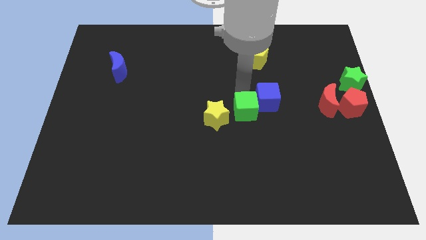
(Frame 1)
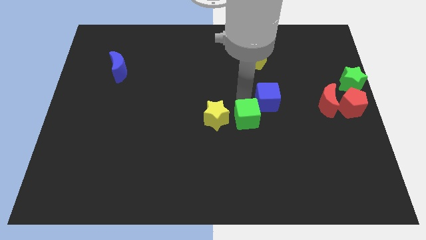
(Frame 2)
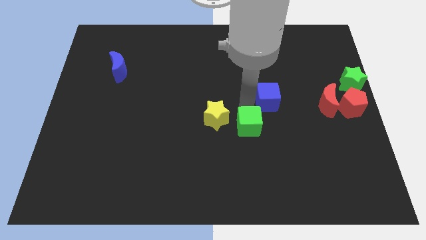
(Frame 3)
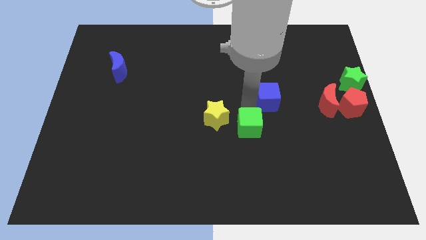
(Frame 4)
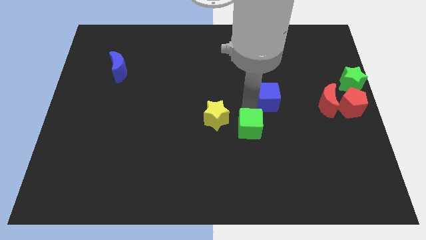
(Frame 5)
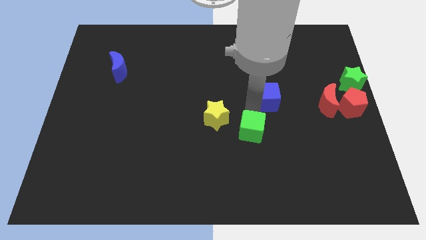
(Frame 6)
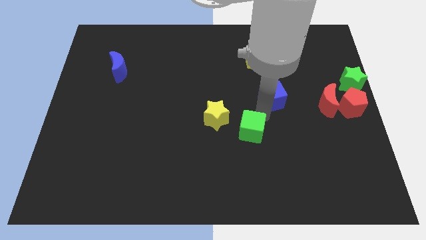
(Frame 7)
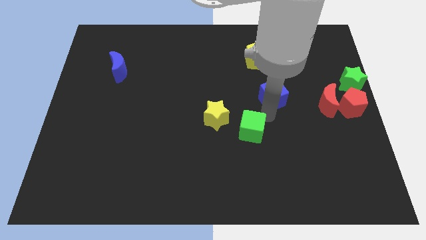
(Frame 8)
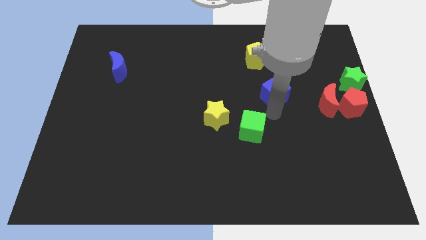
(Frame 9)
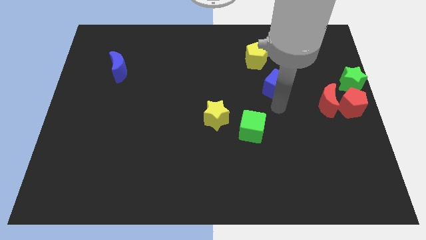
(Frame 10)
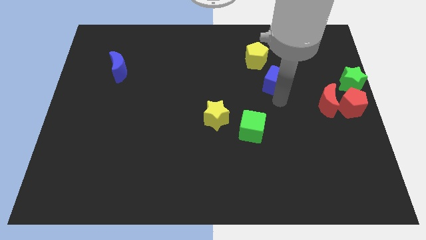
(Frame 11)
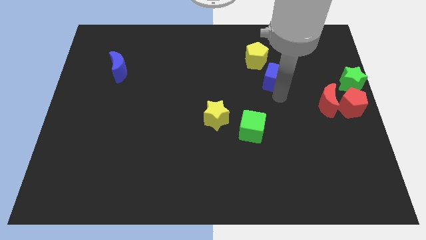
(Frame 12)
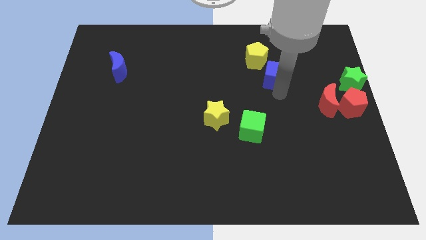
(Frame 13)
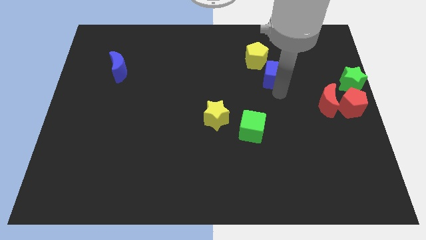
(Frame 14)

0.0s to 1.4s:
separate green cube from the blue cube

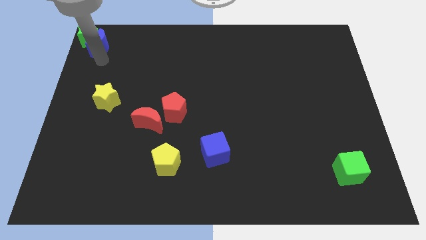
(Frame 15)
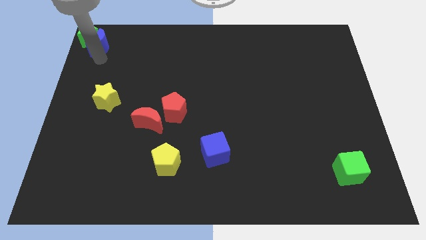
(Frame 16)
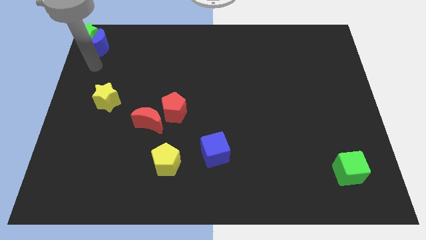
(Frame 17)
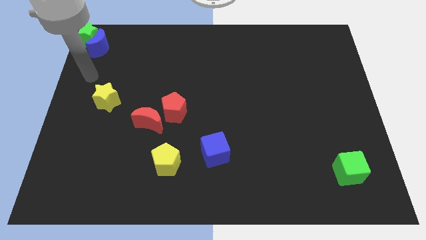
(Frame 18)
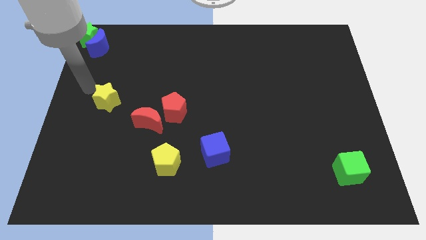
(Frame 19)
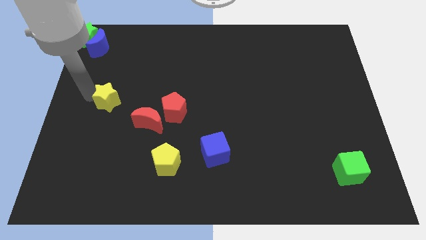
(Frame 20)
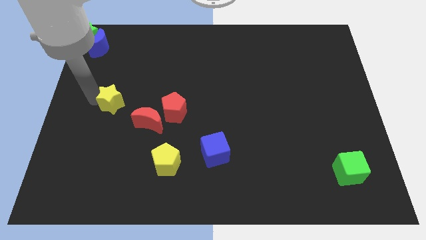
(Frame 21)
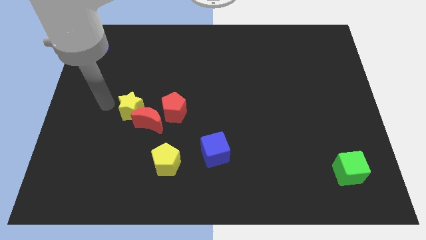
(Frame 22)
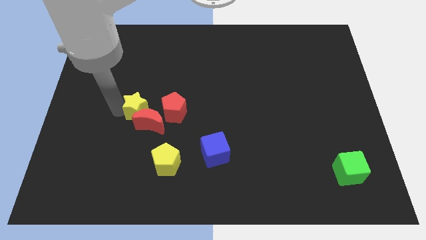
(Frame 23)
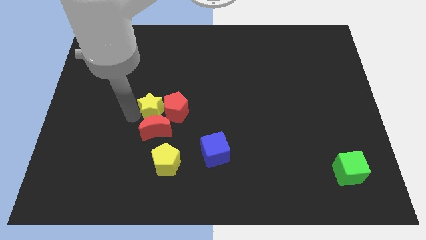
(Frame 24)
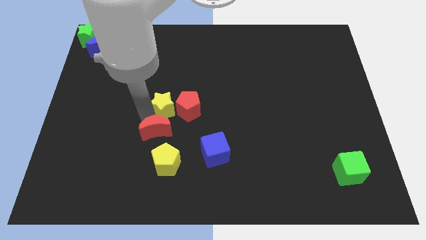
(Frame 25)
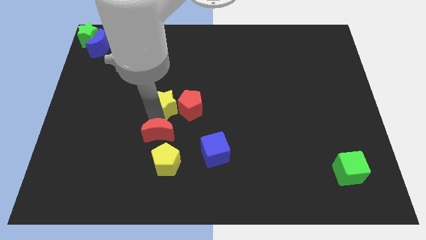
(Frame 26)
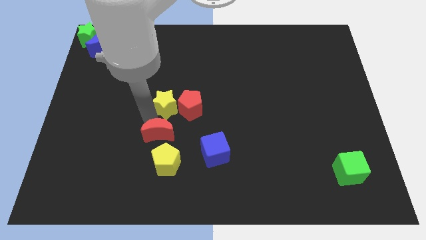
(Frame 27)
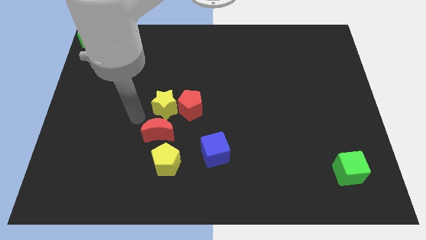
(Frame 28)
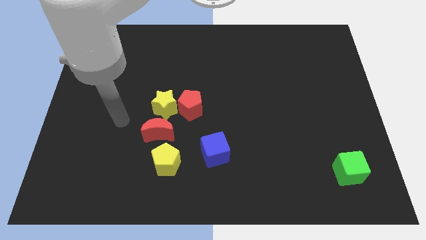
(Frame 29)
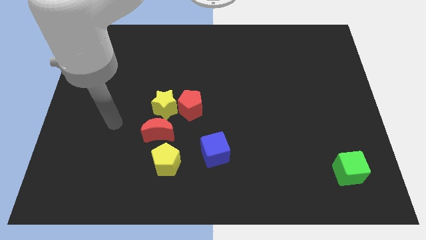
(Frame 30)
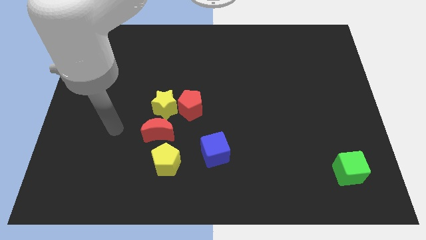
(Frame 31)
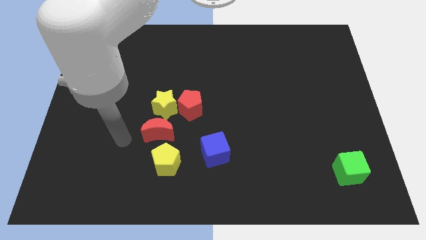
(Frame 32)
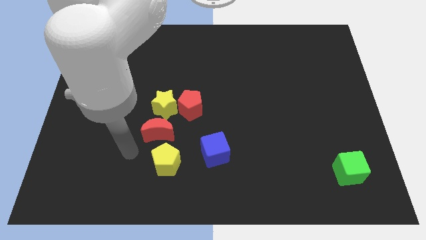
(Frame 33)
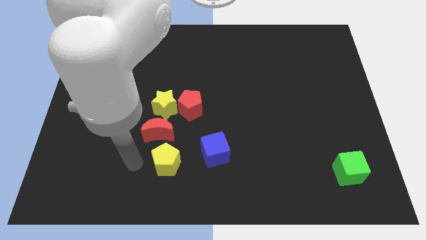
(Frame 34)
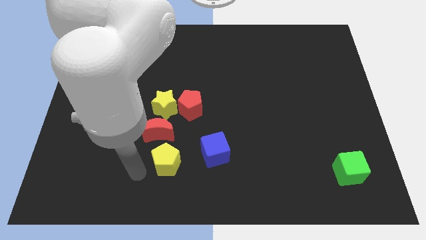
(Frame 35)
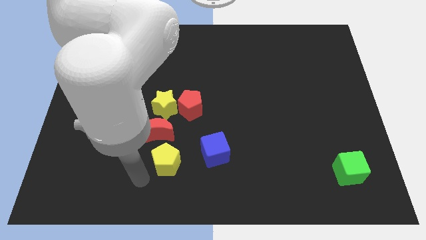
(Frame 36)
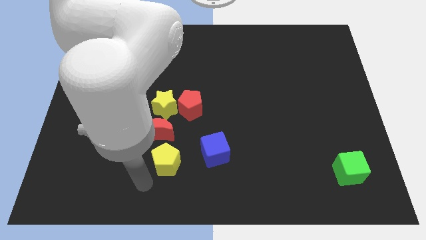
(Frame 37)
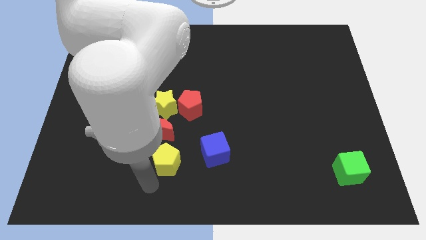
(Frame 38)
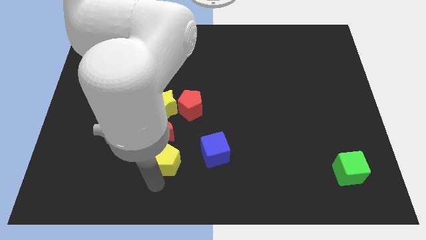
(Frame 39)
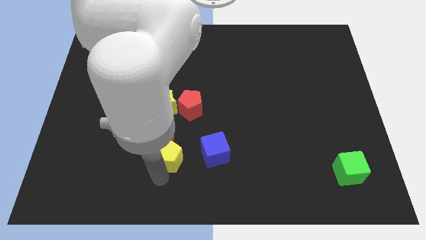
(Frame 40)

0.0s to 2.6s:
move yellow star into red pentagon

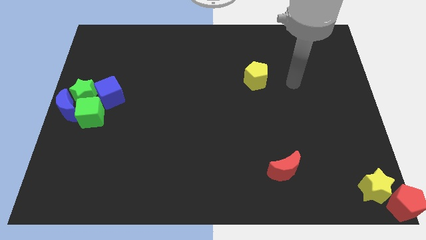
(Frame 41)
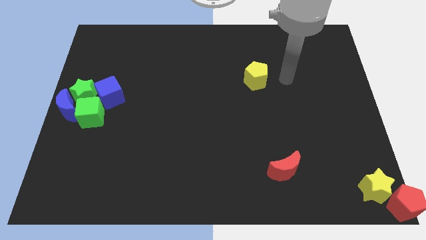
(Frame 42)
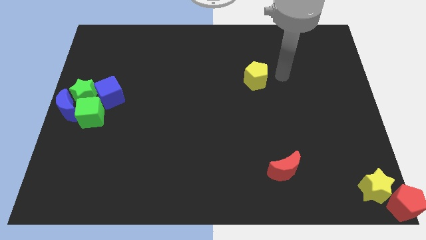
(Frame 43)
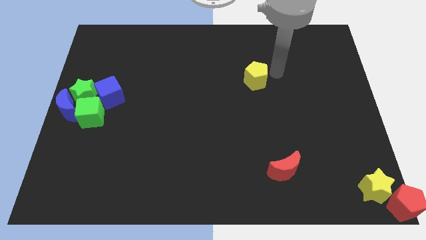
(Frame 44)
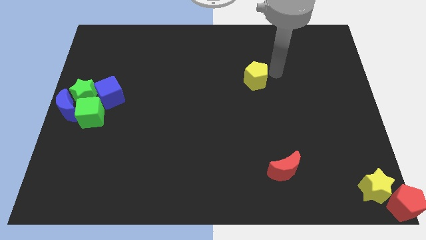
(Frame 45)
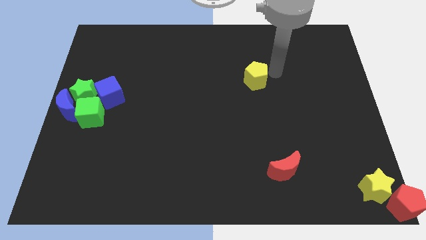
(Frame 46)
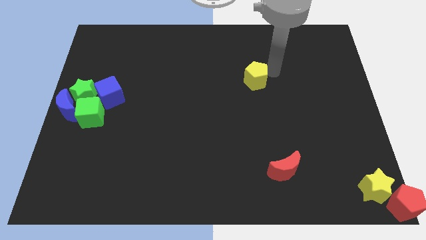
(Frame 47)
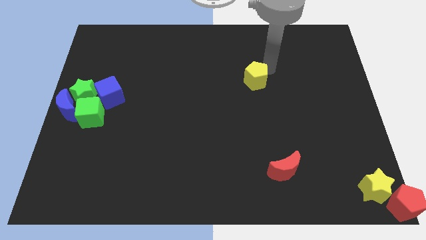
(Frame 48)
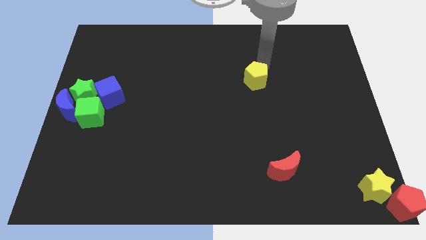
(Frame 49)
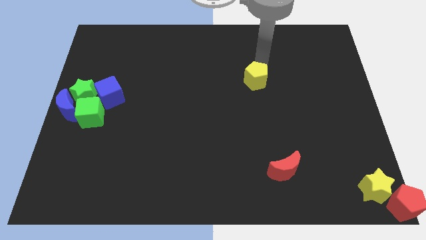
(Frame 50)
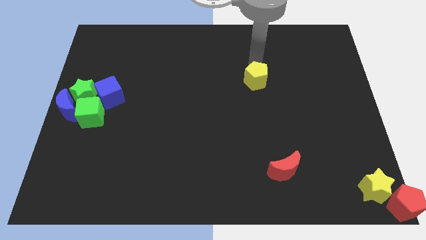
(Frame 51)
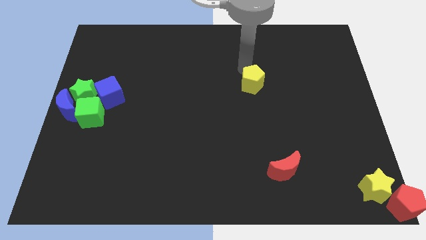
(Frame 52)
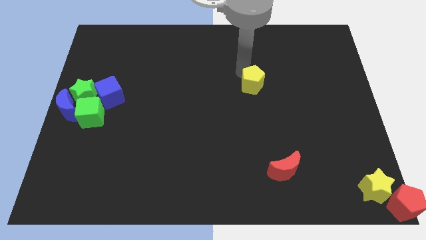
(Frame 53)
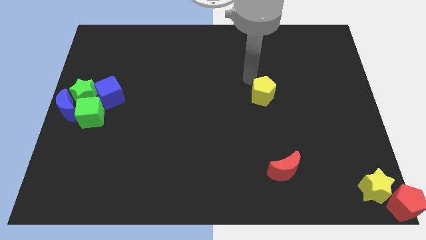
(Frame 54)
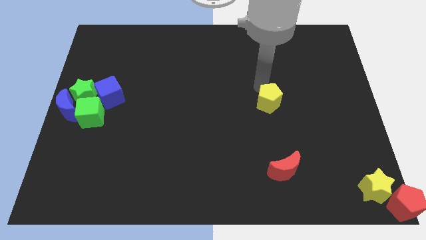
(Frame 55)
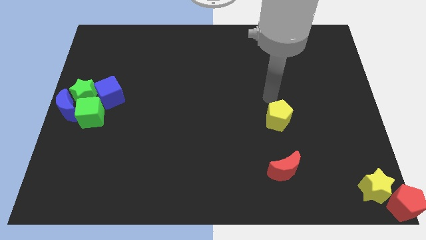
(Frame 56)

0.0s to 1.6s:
move the yellow pentagon towards the red moon

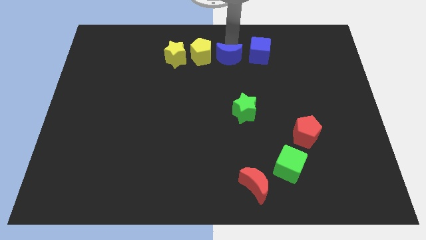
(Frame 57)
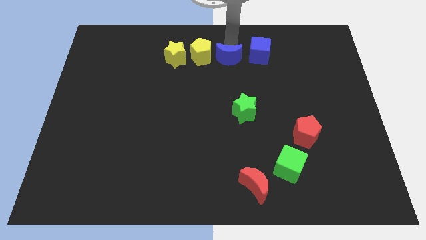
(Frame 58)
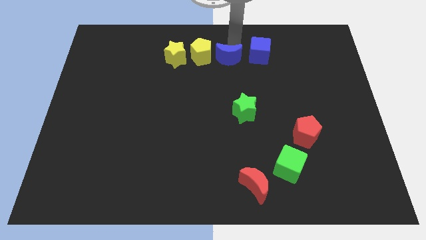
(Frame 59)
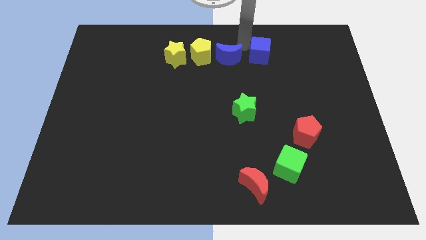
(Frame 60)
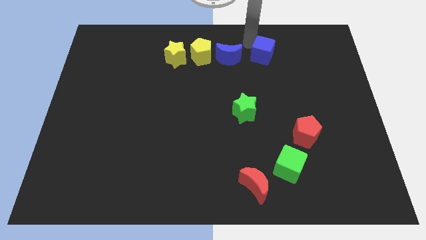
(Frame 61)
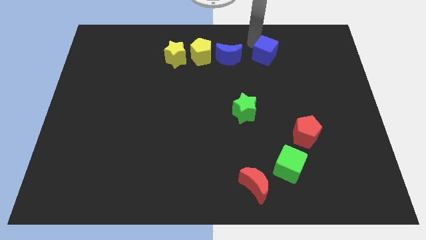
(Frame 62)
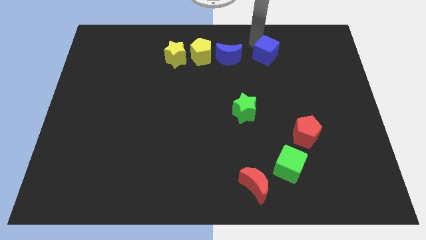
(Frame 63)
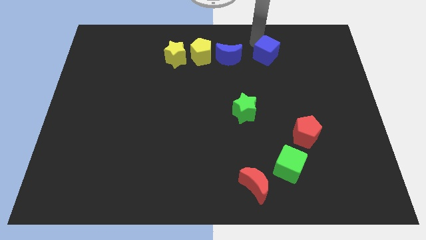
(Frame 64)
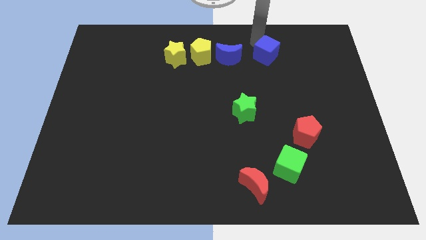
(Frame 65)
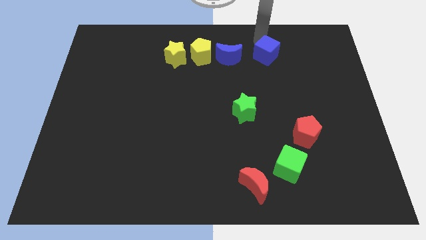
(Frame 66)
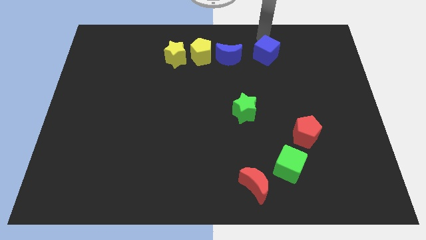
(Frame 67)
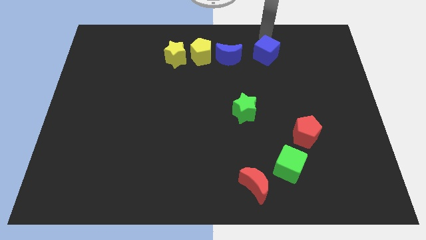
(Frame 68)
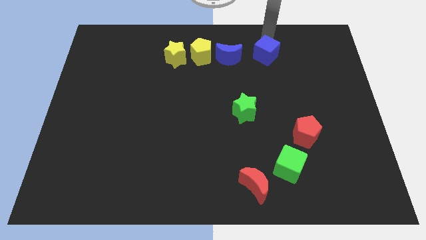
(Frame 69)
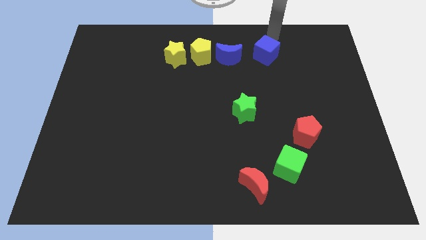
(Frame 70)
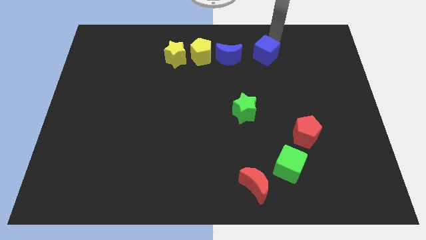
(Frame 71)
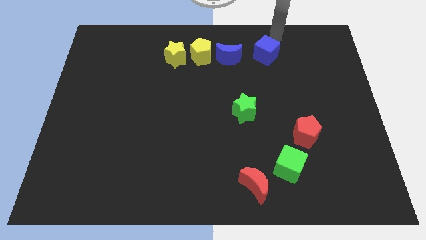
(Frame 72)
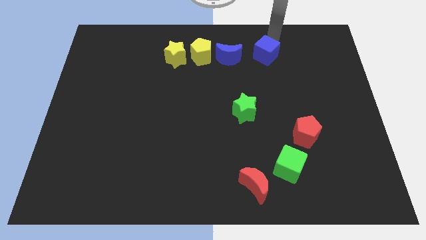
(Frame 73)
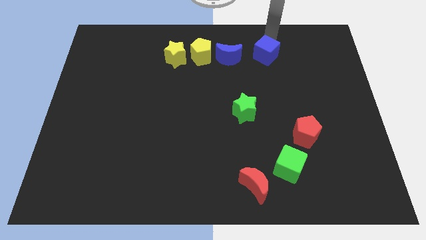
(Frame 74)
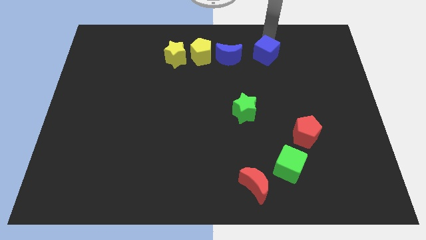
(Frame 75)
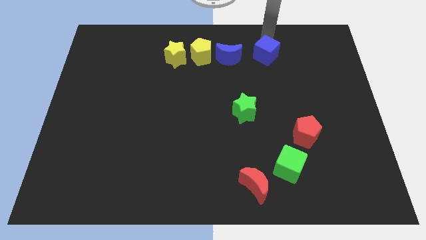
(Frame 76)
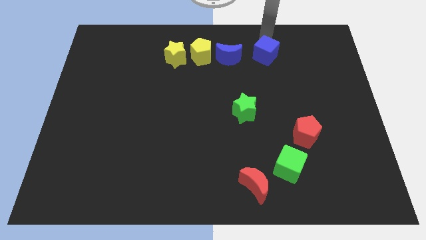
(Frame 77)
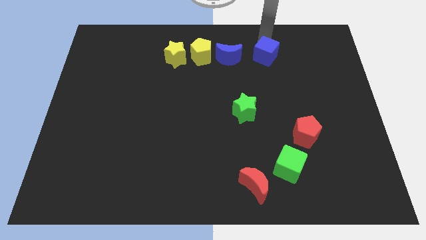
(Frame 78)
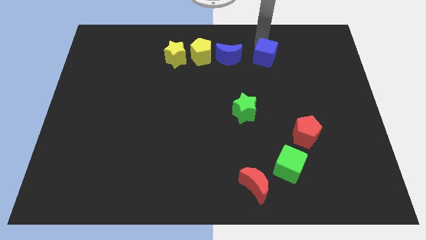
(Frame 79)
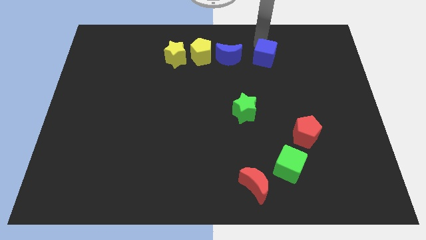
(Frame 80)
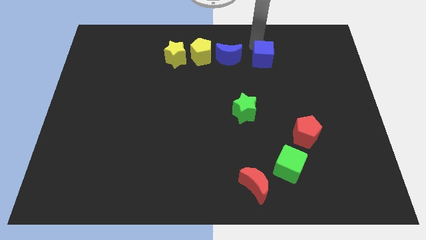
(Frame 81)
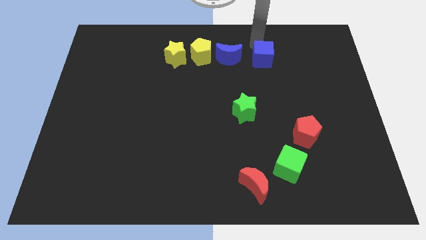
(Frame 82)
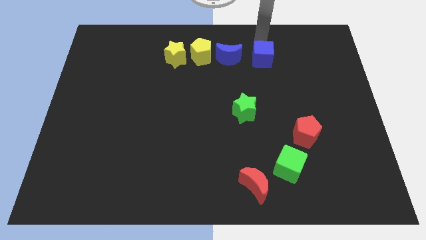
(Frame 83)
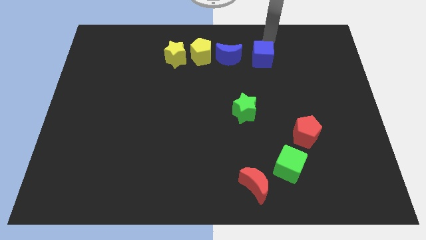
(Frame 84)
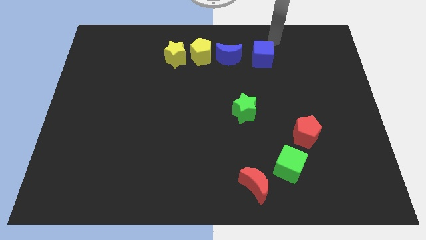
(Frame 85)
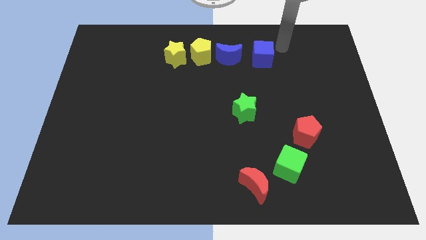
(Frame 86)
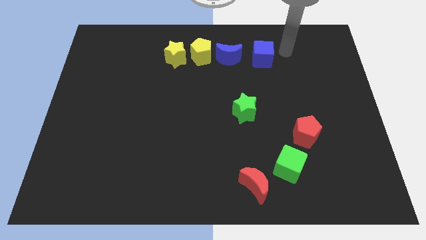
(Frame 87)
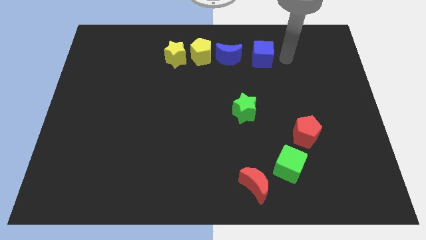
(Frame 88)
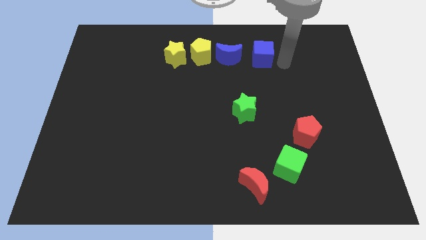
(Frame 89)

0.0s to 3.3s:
slide the blue cube to left side

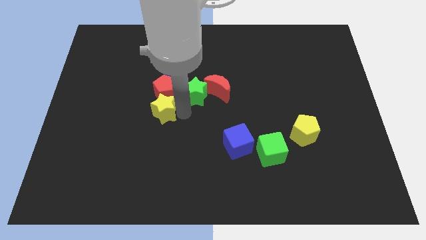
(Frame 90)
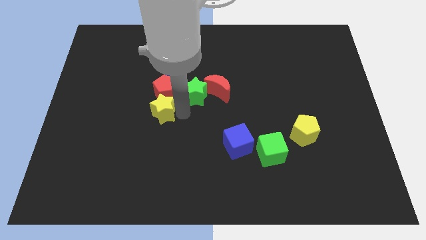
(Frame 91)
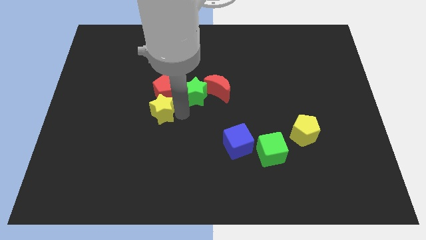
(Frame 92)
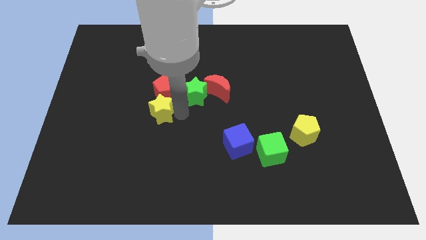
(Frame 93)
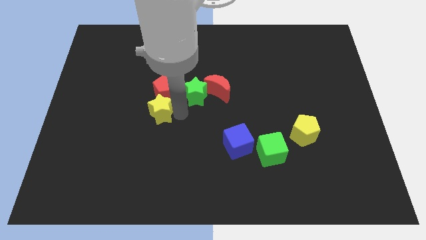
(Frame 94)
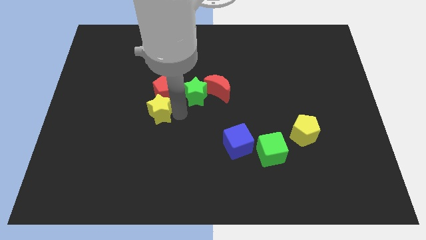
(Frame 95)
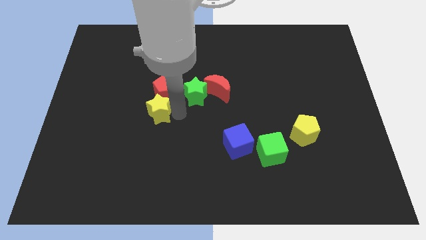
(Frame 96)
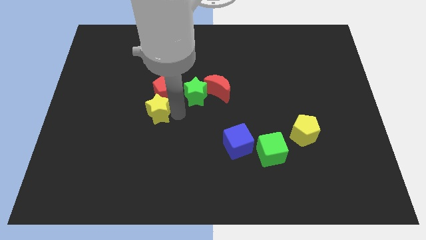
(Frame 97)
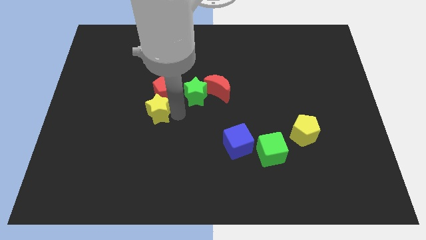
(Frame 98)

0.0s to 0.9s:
place the yellow star below to the red pentagon
